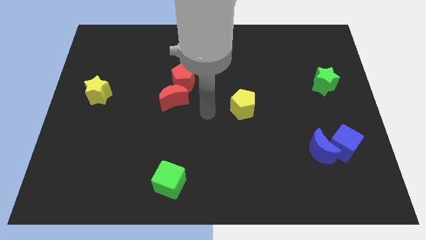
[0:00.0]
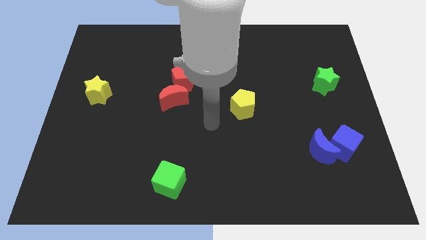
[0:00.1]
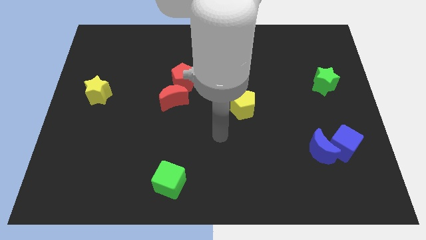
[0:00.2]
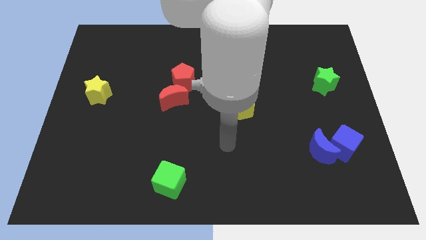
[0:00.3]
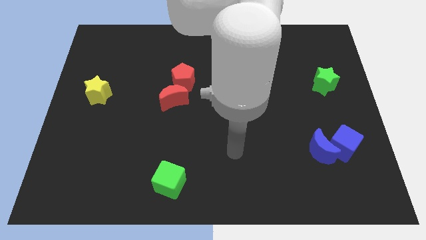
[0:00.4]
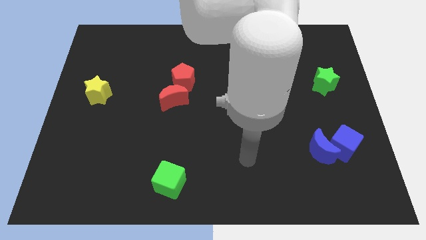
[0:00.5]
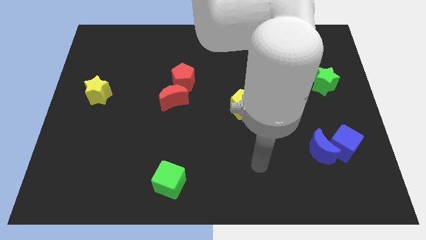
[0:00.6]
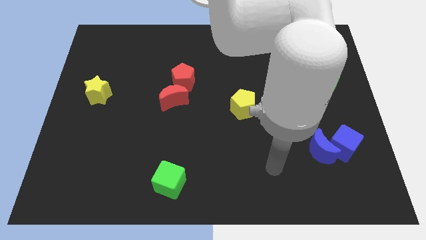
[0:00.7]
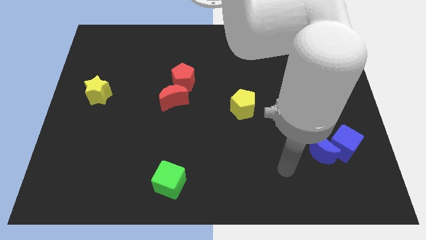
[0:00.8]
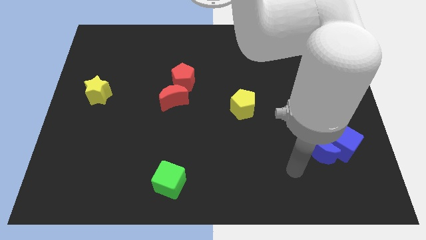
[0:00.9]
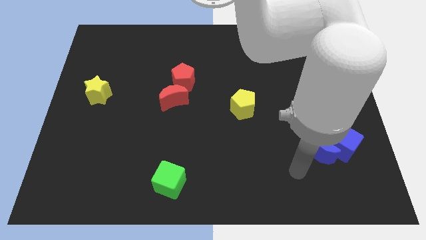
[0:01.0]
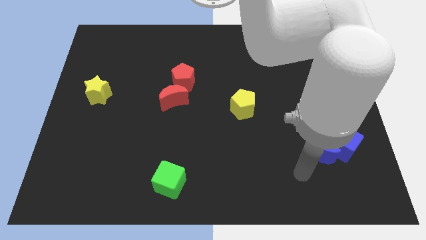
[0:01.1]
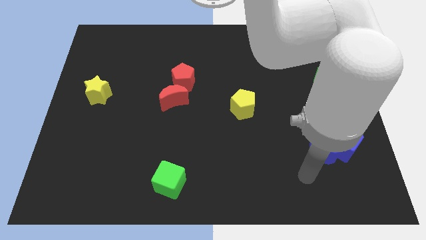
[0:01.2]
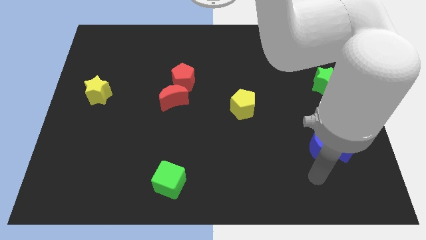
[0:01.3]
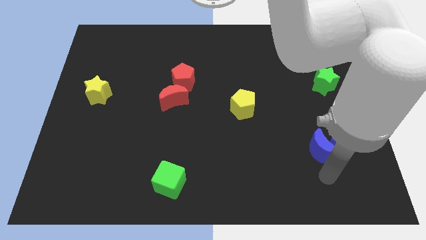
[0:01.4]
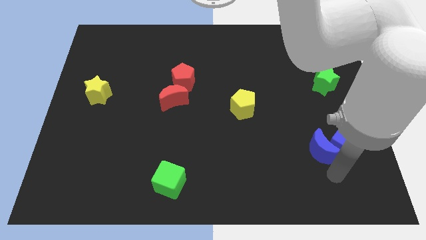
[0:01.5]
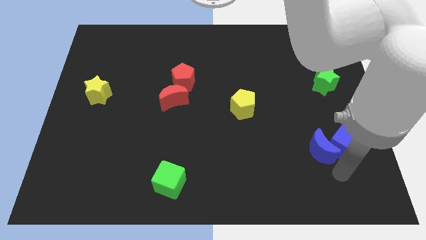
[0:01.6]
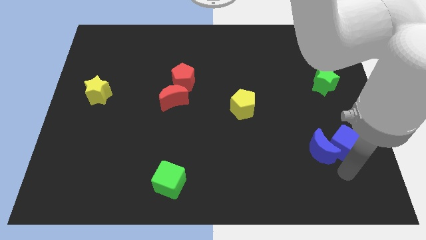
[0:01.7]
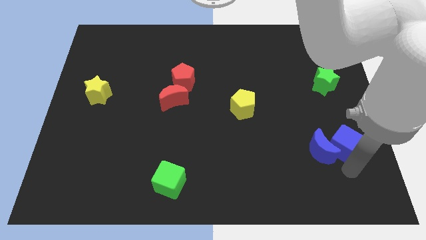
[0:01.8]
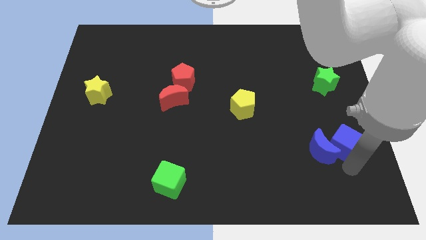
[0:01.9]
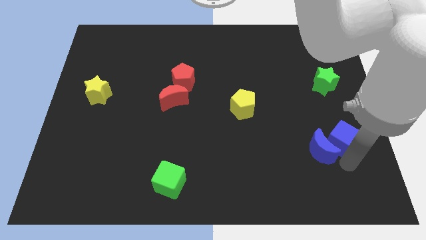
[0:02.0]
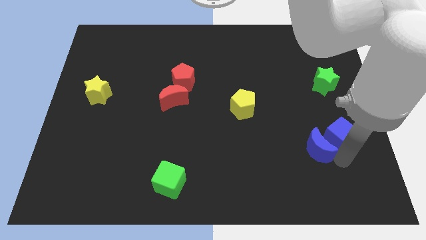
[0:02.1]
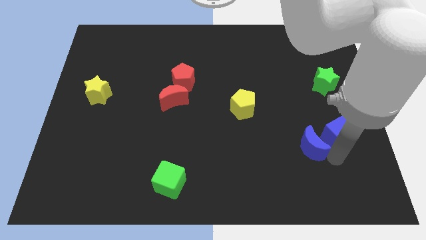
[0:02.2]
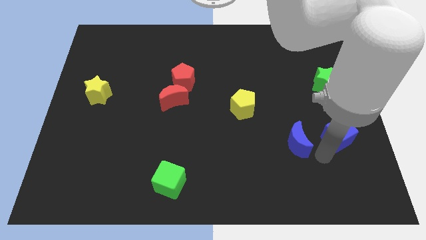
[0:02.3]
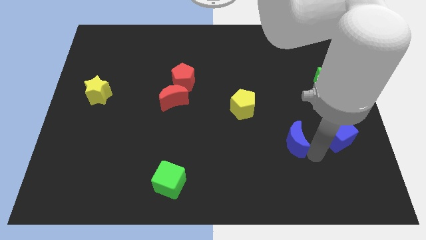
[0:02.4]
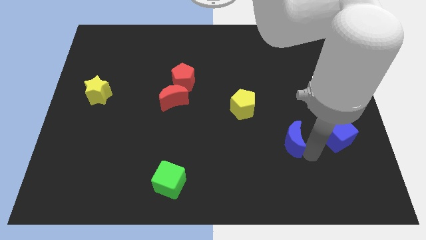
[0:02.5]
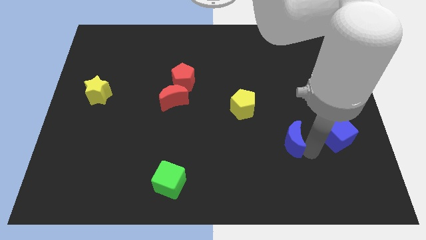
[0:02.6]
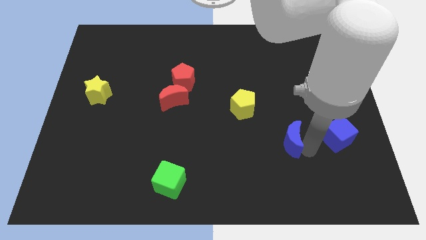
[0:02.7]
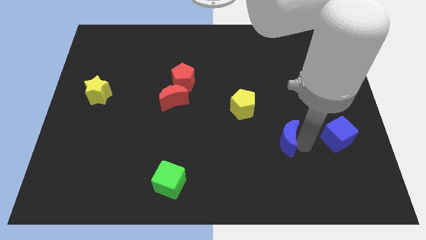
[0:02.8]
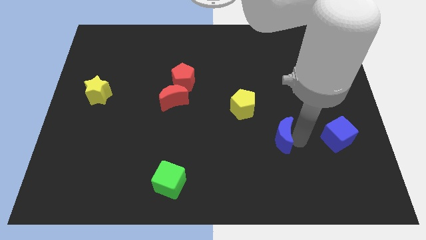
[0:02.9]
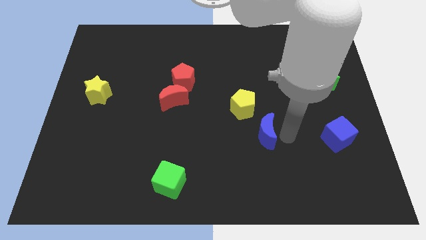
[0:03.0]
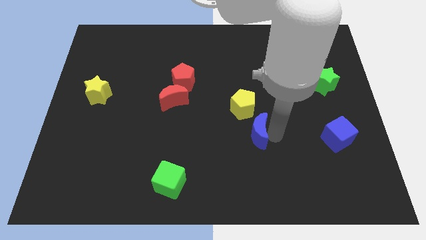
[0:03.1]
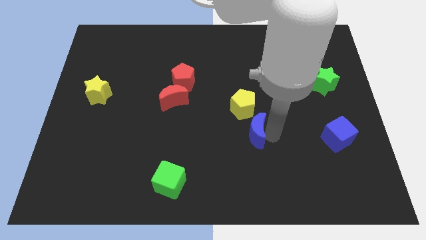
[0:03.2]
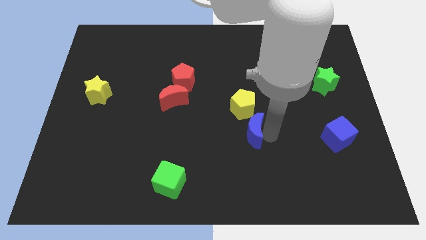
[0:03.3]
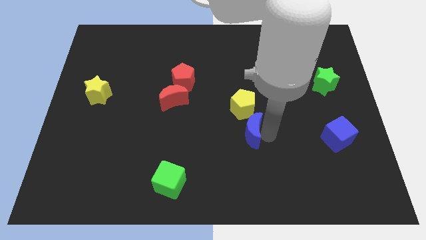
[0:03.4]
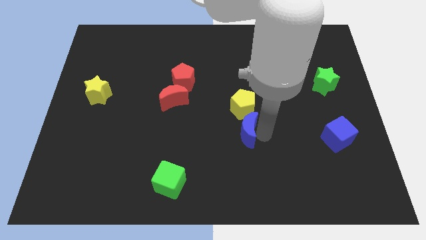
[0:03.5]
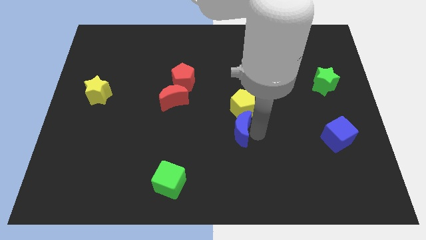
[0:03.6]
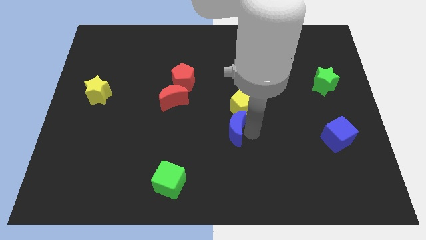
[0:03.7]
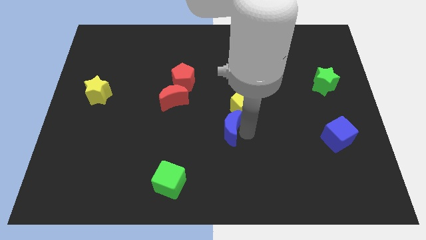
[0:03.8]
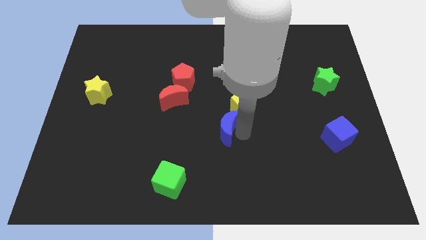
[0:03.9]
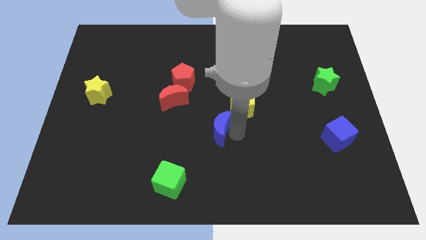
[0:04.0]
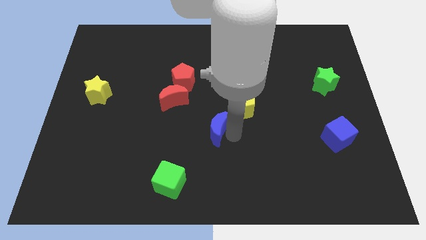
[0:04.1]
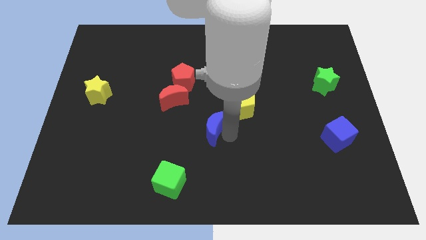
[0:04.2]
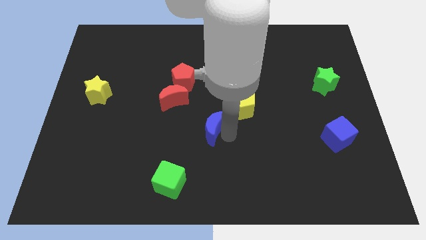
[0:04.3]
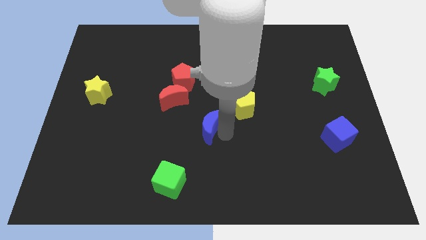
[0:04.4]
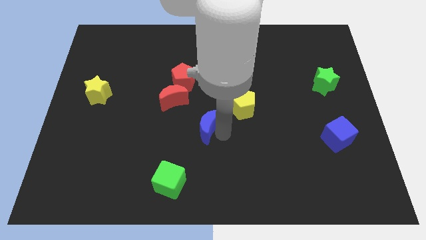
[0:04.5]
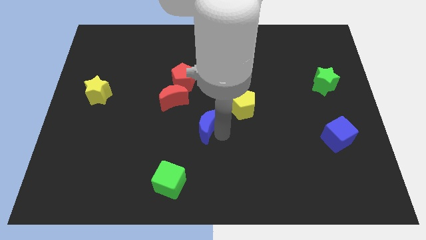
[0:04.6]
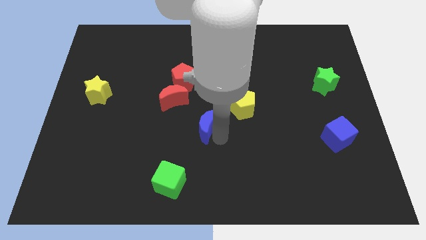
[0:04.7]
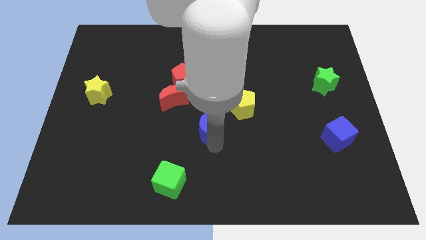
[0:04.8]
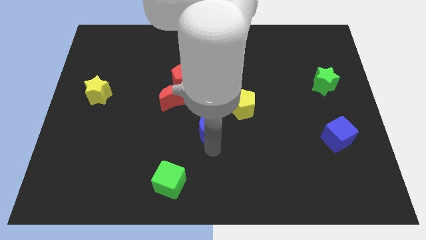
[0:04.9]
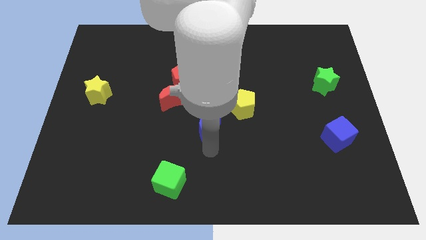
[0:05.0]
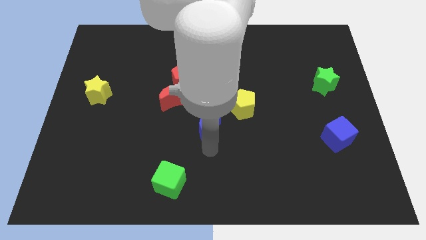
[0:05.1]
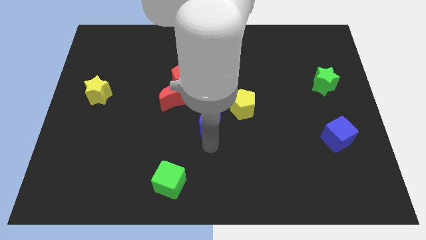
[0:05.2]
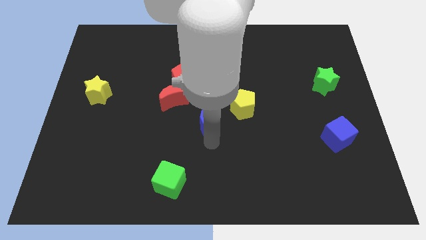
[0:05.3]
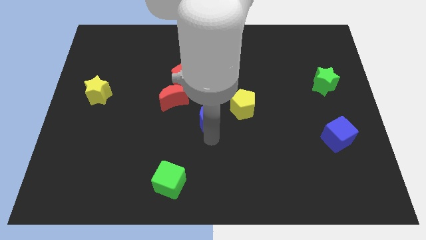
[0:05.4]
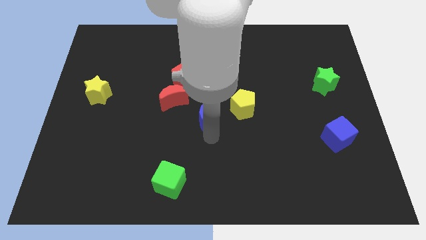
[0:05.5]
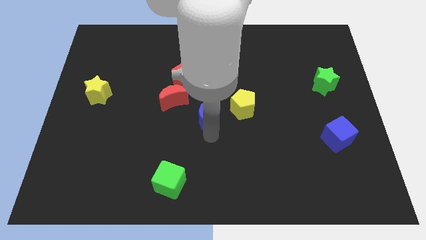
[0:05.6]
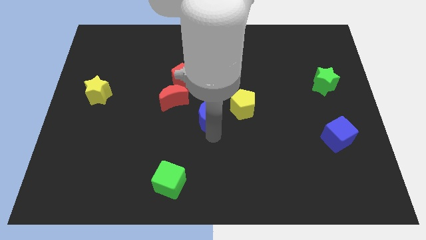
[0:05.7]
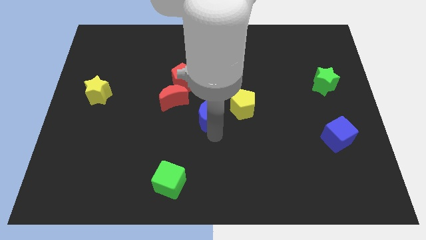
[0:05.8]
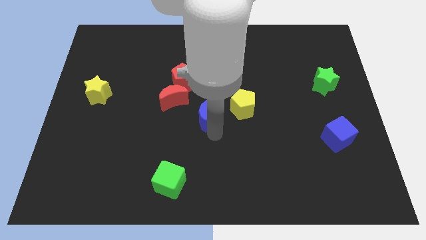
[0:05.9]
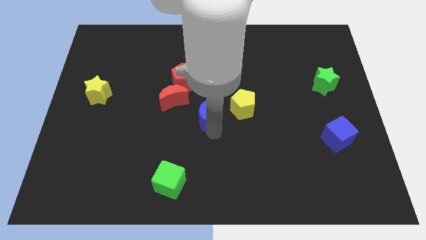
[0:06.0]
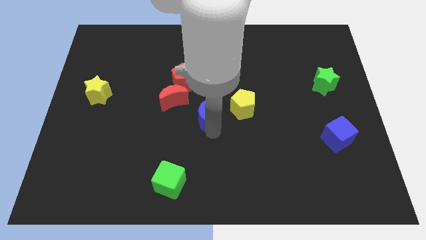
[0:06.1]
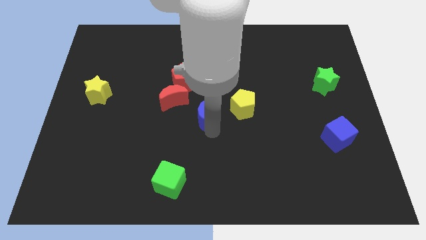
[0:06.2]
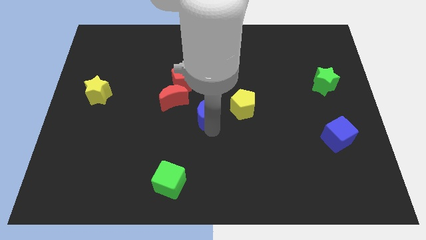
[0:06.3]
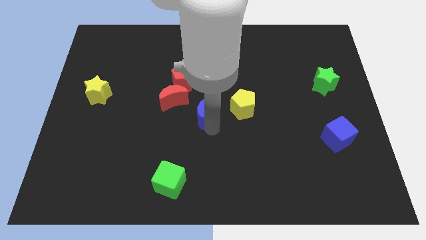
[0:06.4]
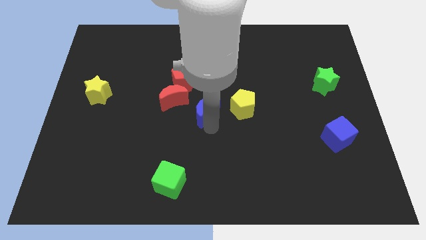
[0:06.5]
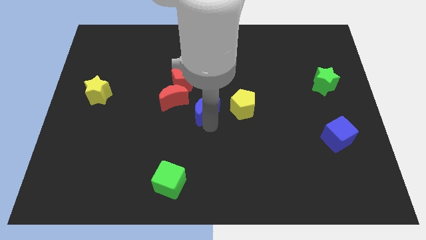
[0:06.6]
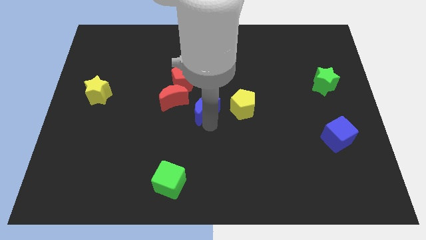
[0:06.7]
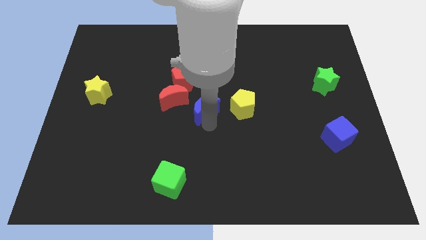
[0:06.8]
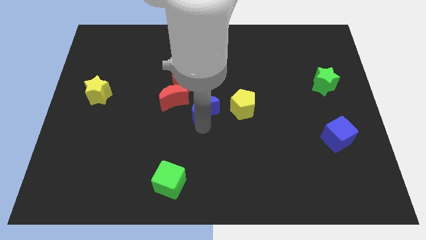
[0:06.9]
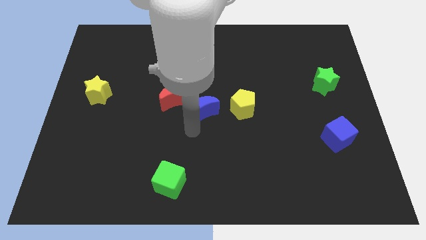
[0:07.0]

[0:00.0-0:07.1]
slide the blue moon diagonally to the red crescent

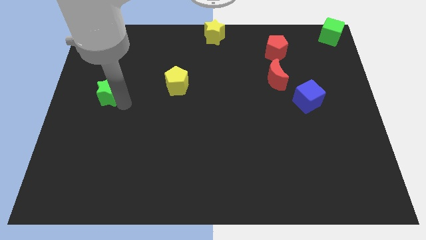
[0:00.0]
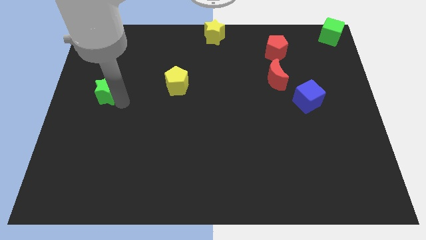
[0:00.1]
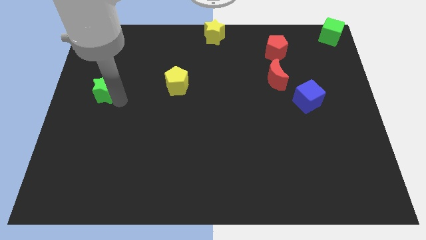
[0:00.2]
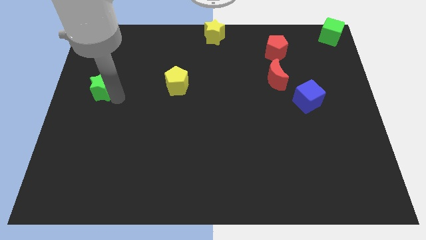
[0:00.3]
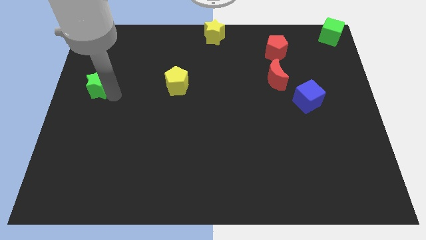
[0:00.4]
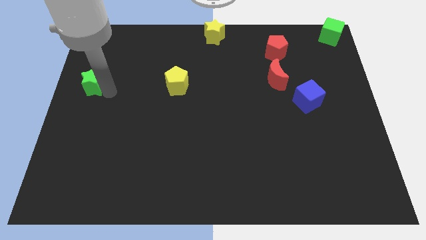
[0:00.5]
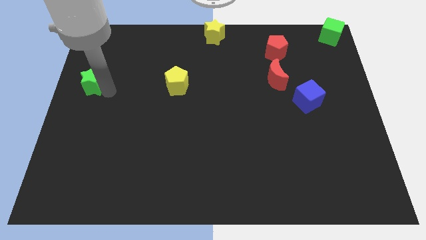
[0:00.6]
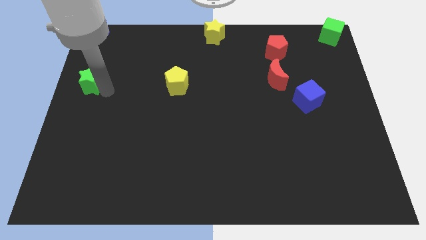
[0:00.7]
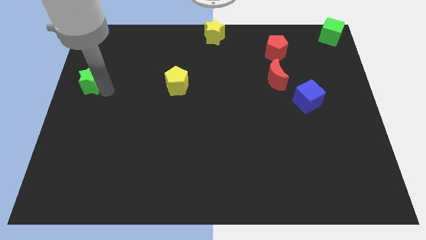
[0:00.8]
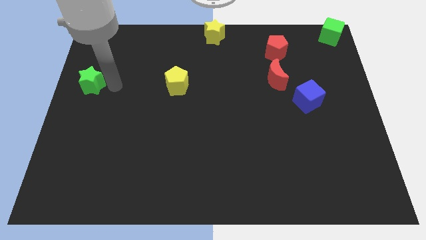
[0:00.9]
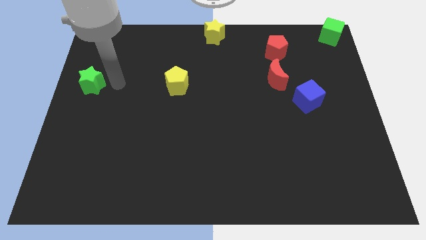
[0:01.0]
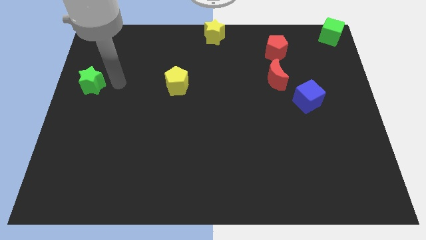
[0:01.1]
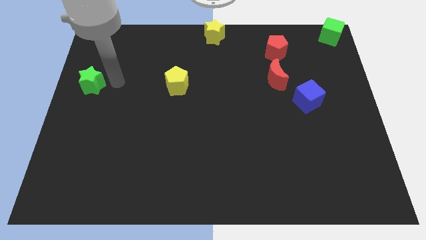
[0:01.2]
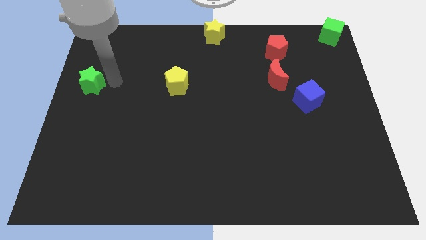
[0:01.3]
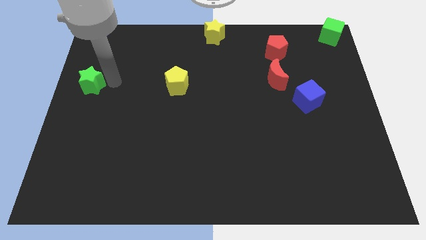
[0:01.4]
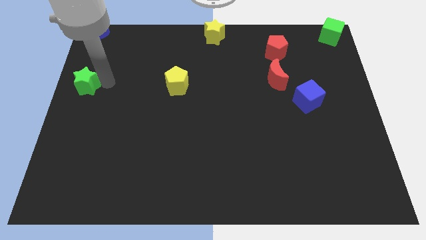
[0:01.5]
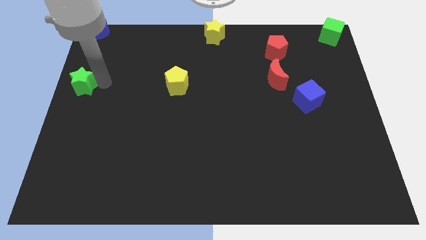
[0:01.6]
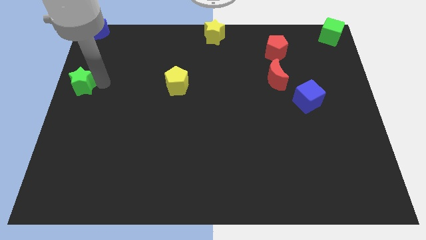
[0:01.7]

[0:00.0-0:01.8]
move the green star to the left of the board
